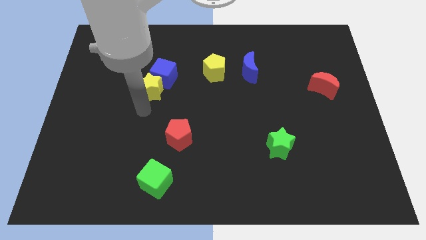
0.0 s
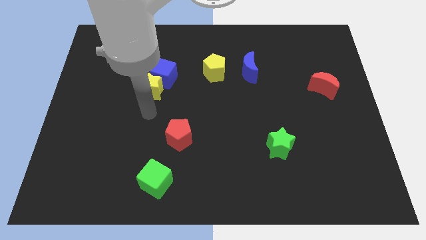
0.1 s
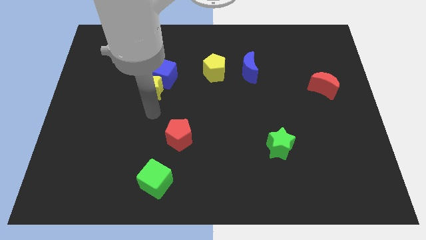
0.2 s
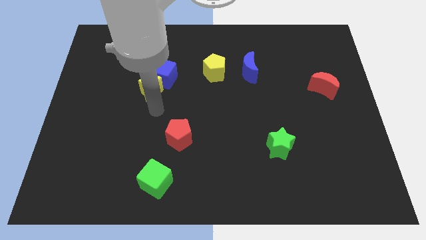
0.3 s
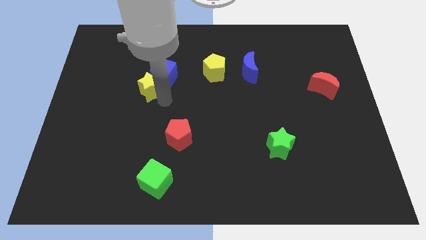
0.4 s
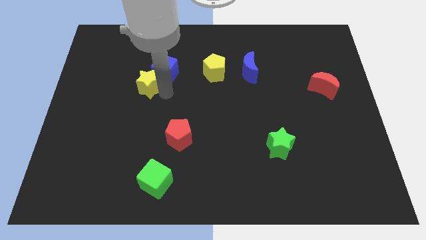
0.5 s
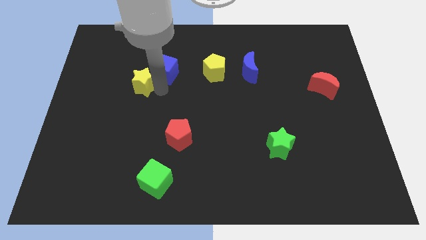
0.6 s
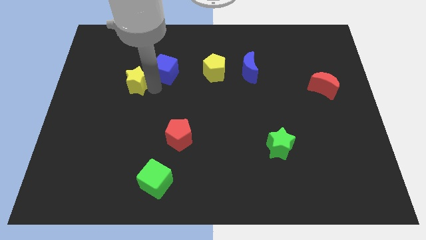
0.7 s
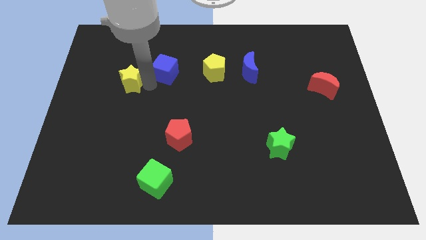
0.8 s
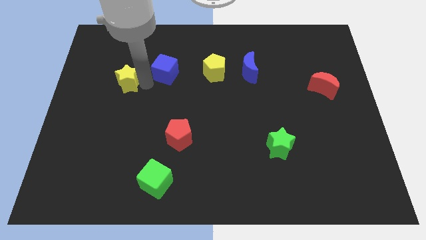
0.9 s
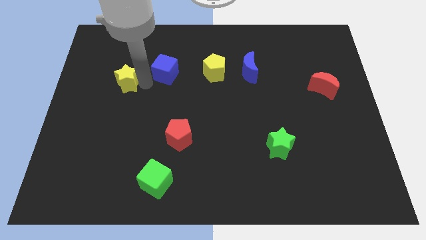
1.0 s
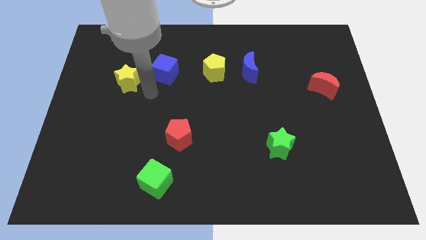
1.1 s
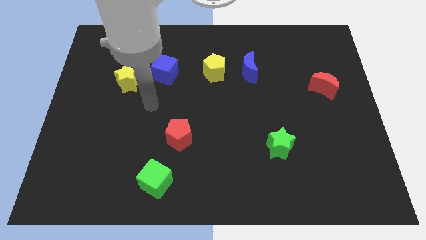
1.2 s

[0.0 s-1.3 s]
separate the yellow star from the blue cube

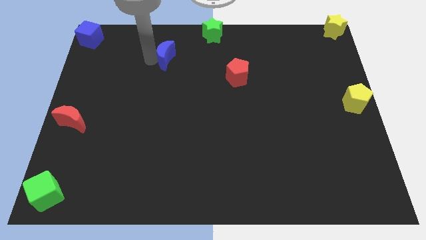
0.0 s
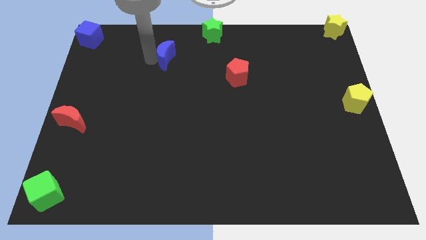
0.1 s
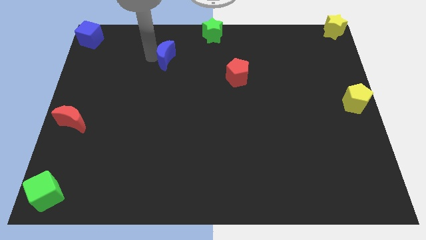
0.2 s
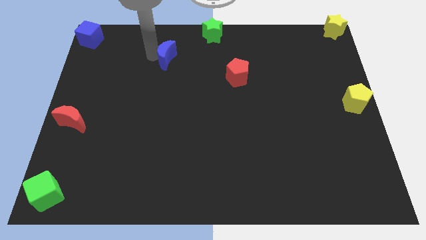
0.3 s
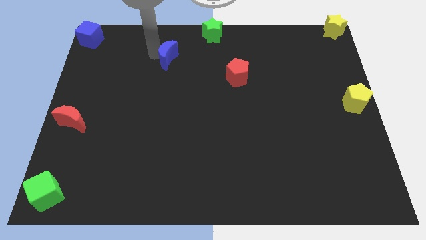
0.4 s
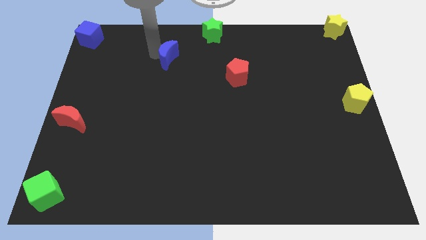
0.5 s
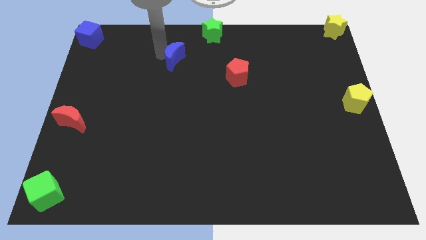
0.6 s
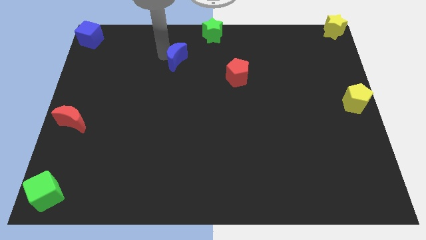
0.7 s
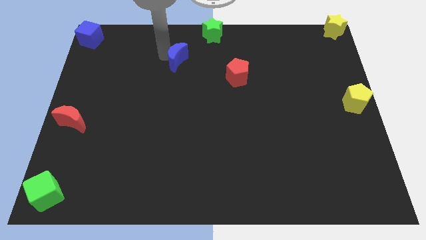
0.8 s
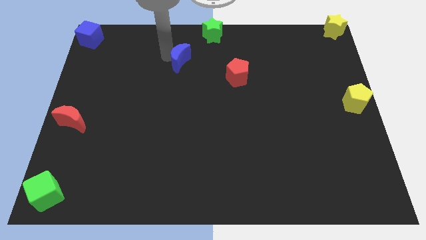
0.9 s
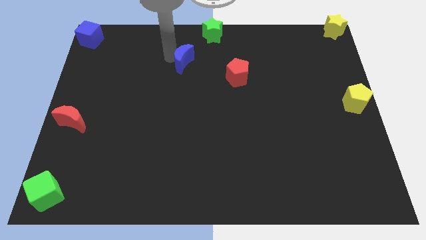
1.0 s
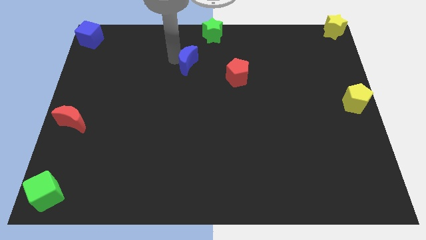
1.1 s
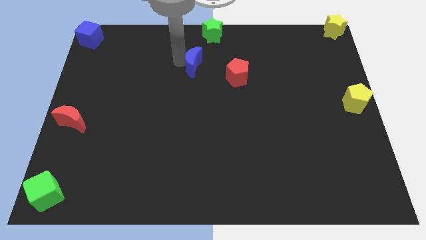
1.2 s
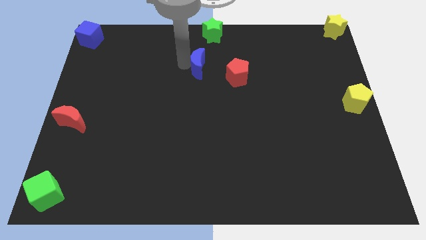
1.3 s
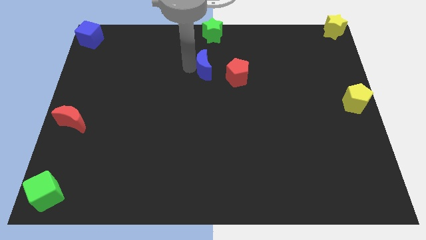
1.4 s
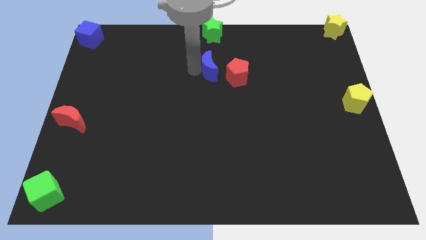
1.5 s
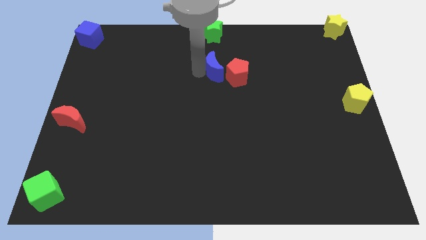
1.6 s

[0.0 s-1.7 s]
put the blue moon towards the red pentagon

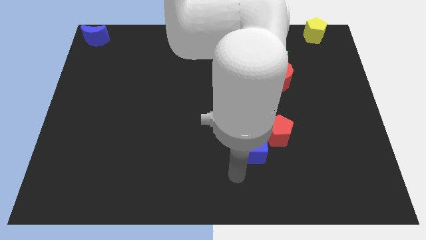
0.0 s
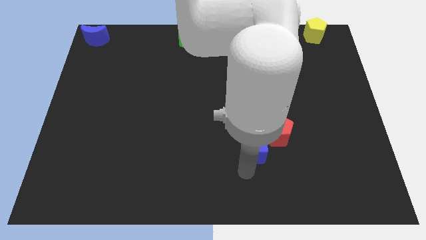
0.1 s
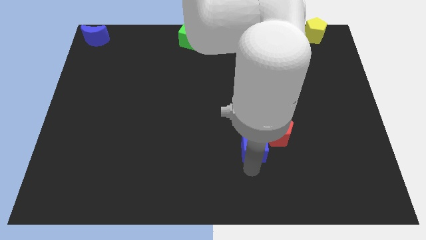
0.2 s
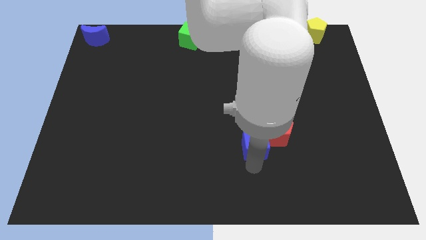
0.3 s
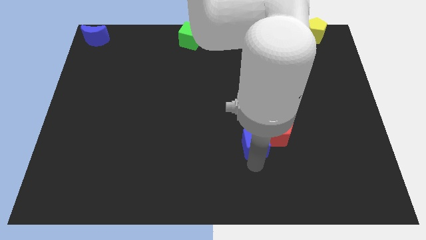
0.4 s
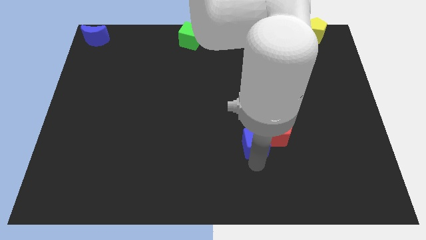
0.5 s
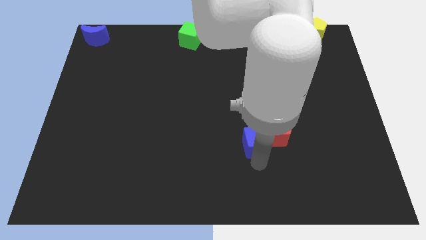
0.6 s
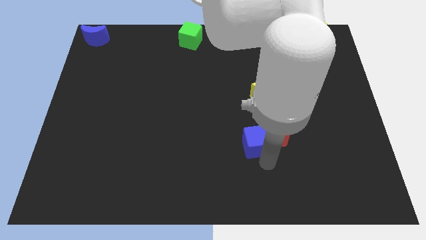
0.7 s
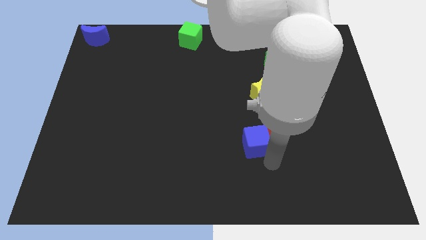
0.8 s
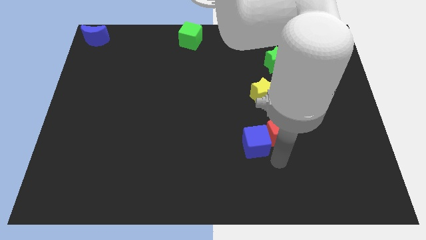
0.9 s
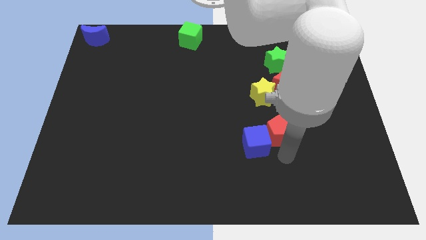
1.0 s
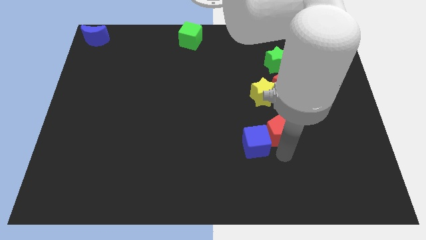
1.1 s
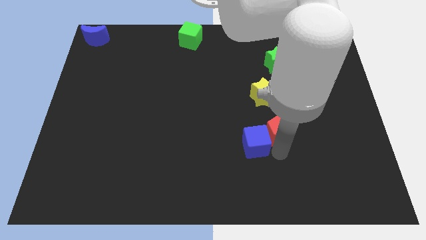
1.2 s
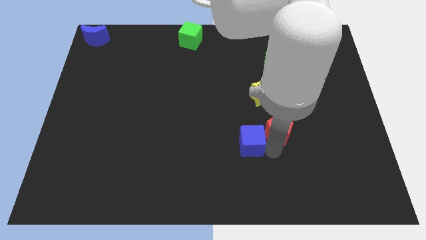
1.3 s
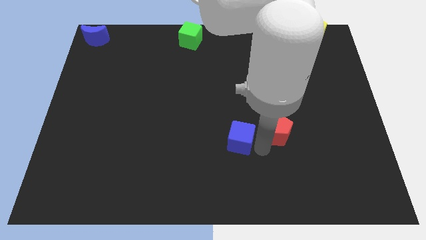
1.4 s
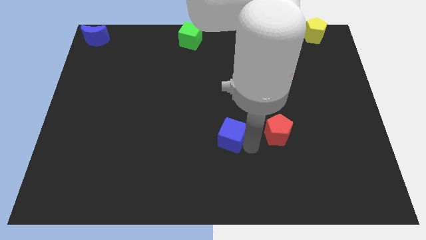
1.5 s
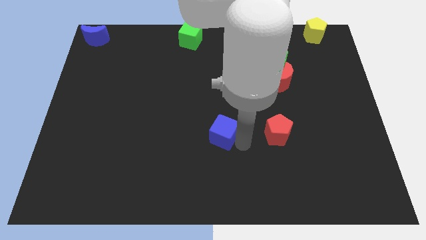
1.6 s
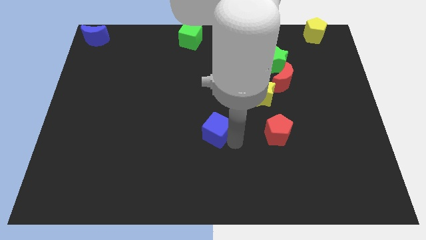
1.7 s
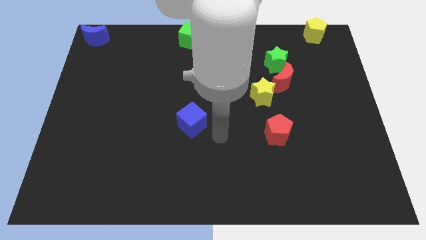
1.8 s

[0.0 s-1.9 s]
separate blue cube and red pentagon

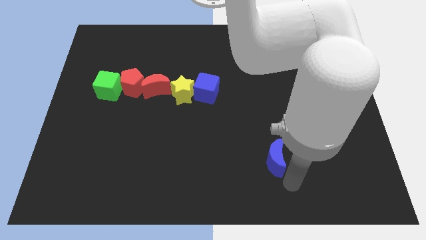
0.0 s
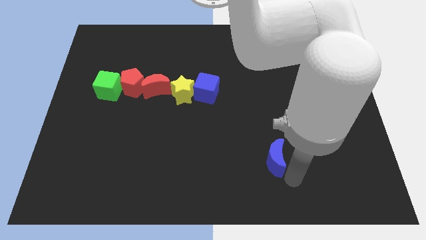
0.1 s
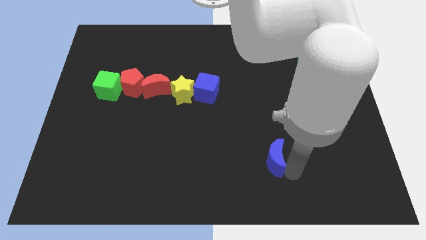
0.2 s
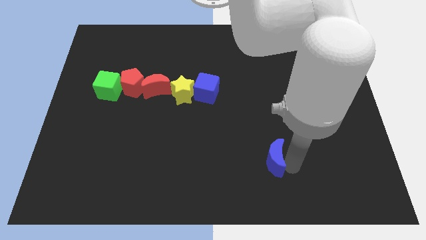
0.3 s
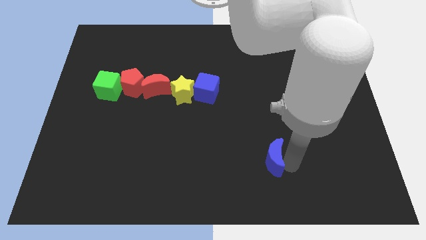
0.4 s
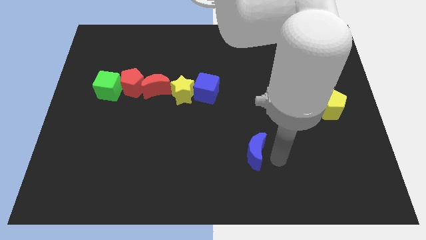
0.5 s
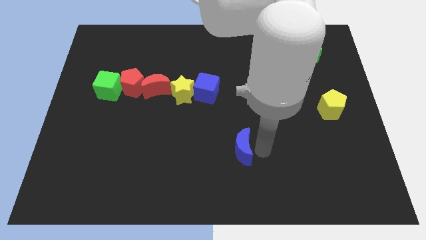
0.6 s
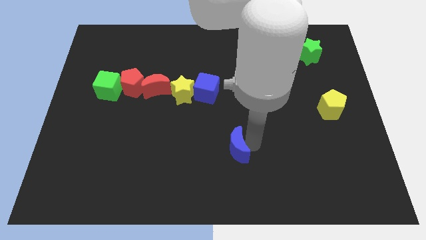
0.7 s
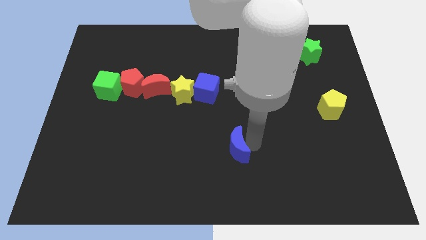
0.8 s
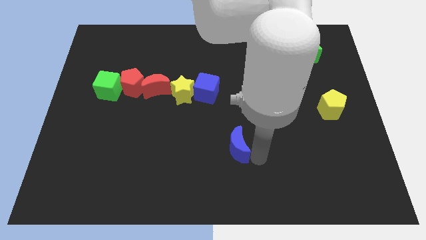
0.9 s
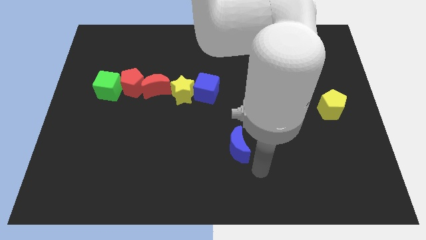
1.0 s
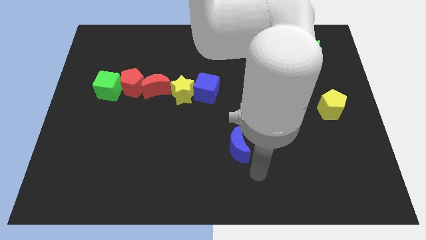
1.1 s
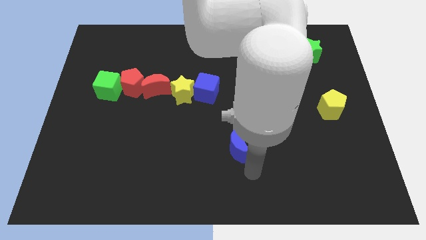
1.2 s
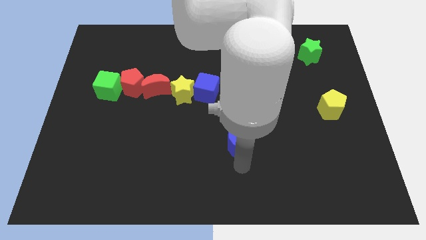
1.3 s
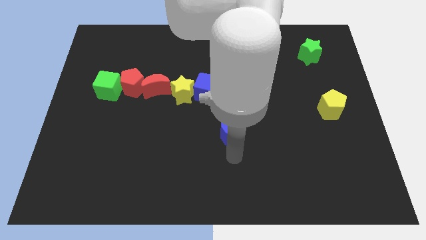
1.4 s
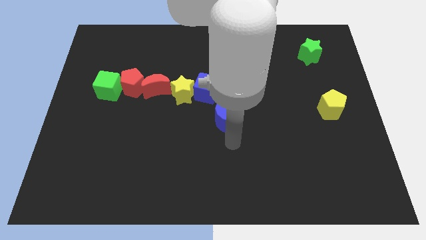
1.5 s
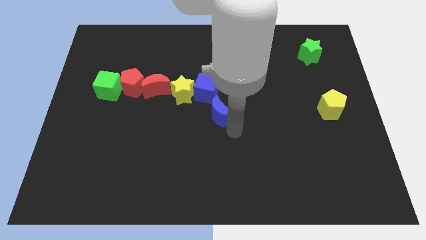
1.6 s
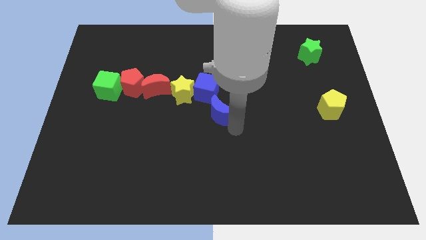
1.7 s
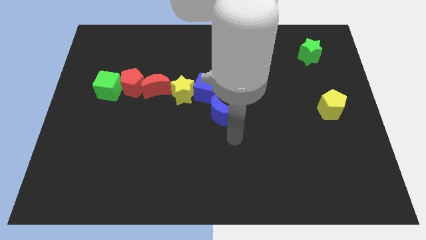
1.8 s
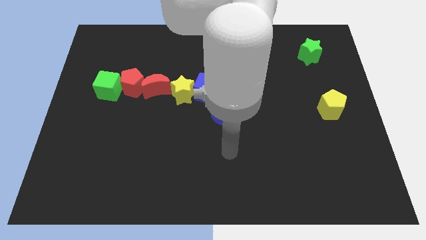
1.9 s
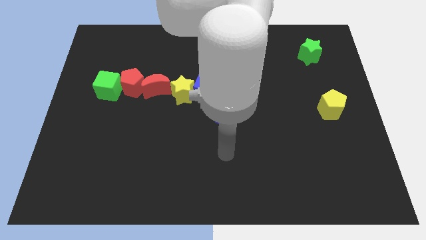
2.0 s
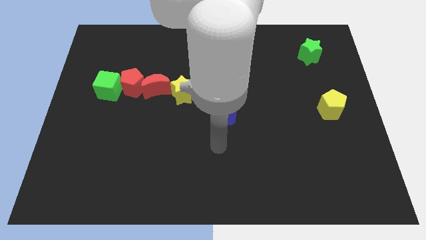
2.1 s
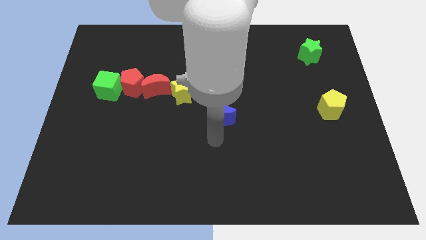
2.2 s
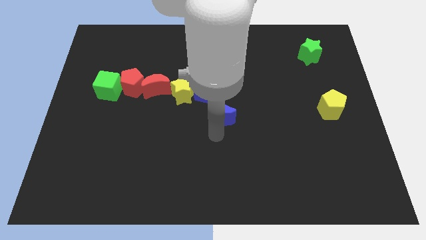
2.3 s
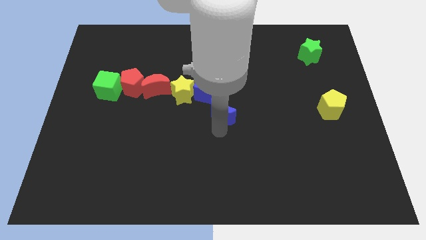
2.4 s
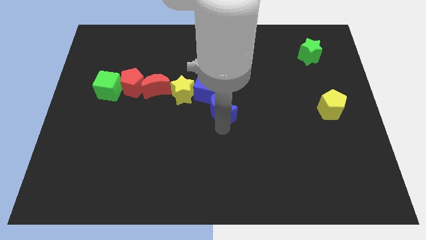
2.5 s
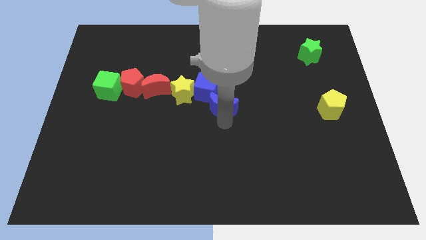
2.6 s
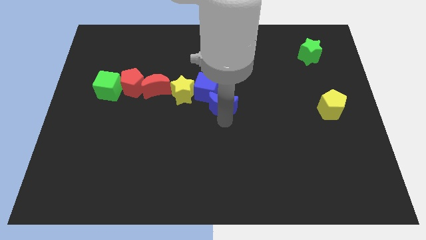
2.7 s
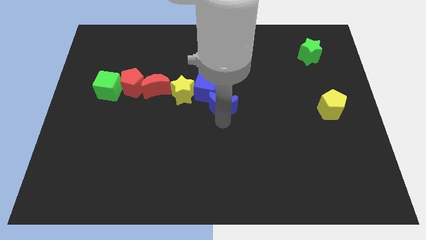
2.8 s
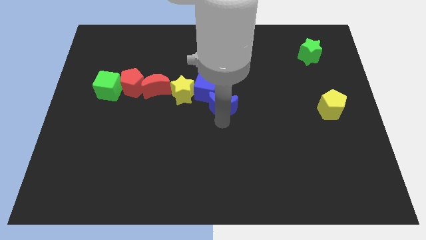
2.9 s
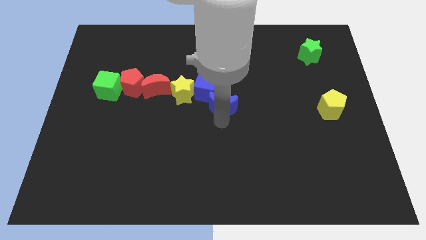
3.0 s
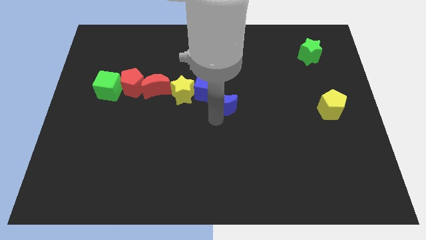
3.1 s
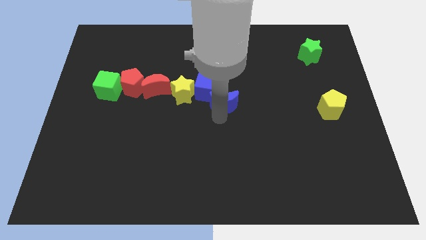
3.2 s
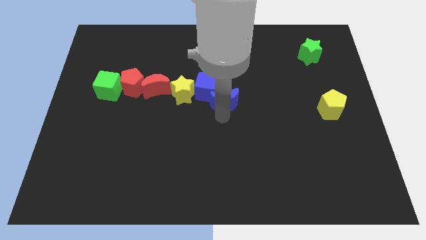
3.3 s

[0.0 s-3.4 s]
push the blue moon at the bottom right of the blue moon

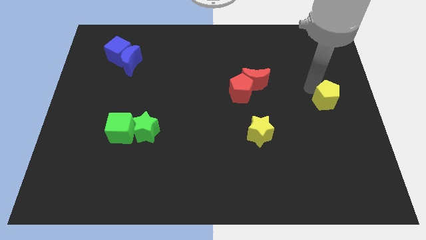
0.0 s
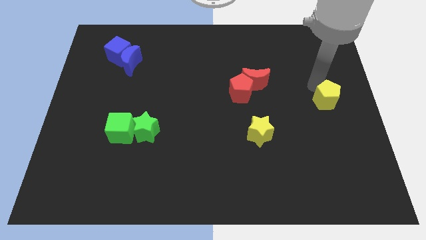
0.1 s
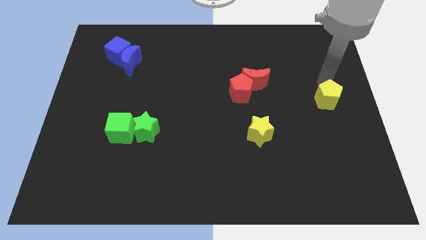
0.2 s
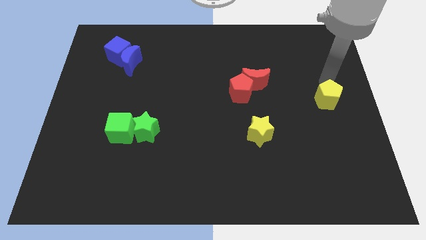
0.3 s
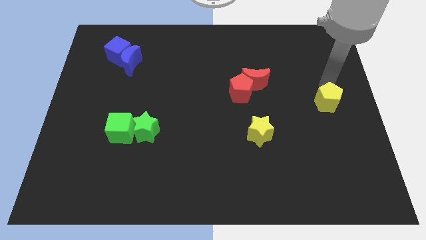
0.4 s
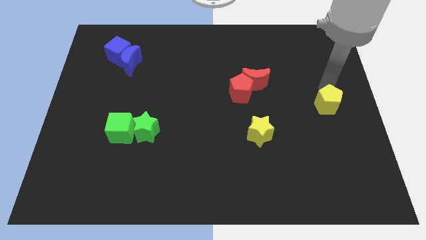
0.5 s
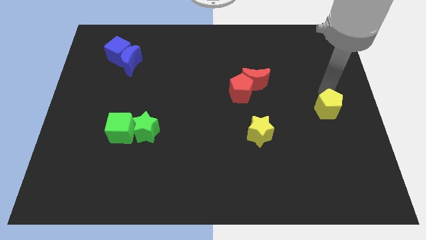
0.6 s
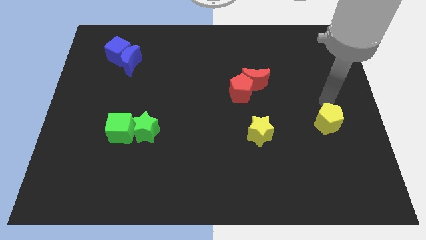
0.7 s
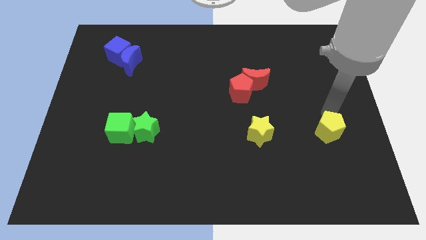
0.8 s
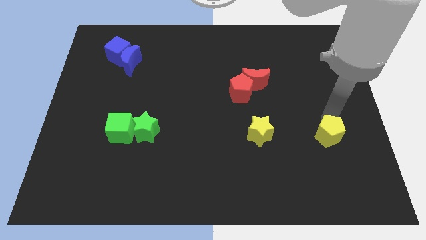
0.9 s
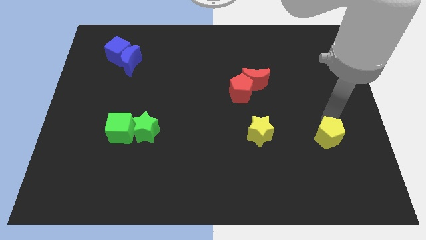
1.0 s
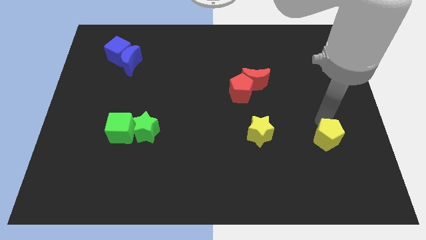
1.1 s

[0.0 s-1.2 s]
push yellow pentagon slightly towards down
